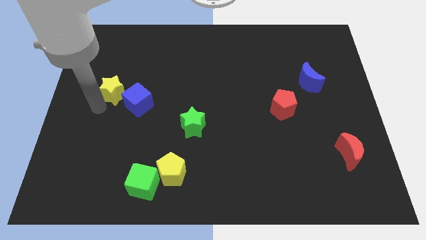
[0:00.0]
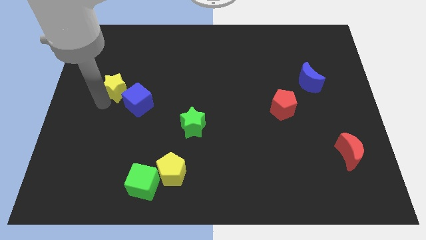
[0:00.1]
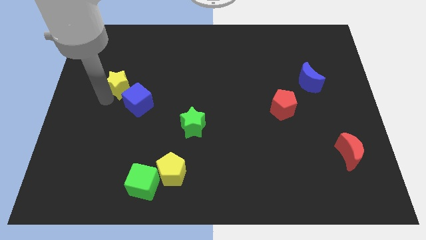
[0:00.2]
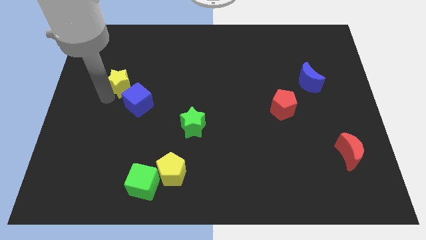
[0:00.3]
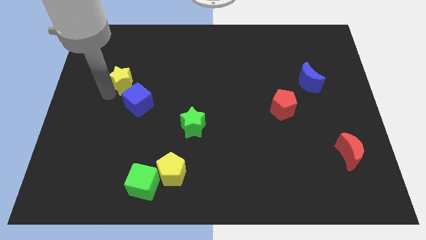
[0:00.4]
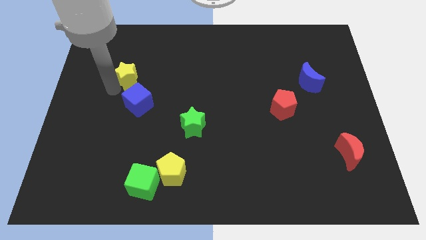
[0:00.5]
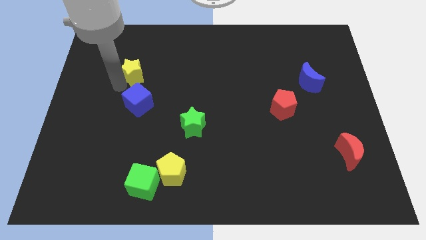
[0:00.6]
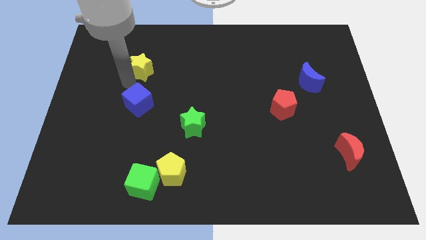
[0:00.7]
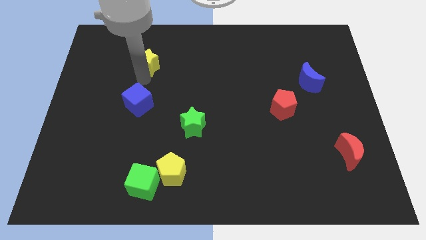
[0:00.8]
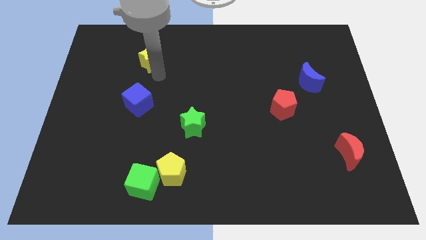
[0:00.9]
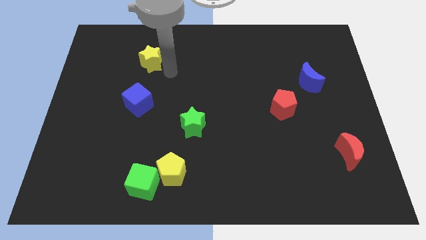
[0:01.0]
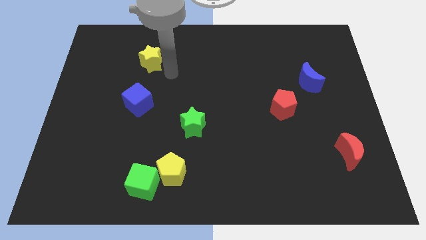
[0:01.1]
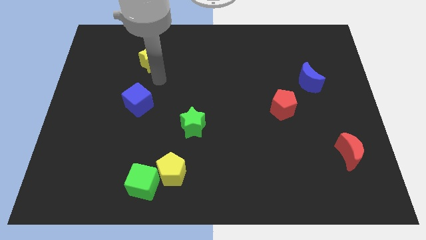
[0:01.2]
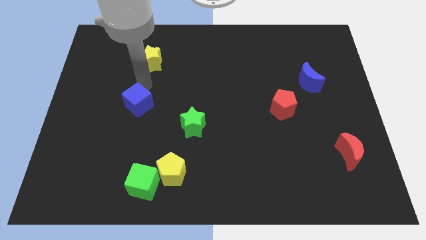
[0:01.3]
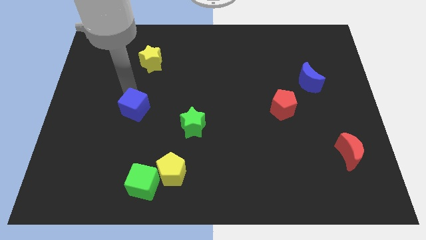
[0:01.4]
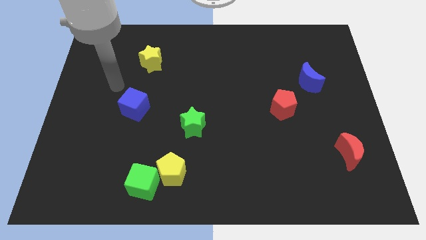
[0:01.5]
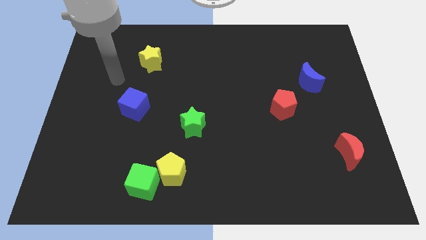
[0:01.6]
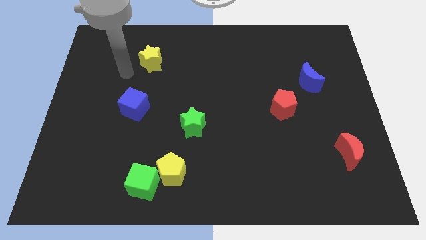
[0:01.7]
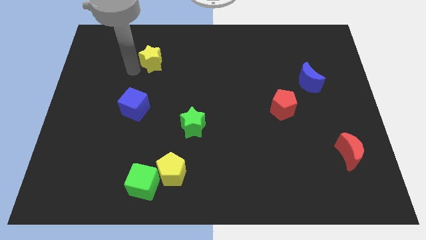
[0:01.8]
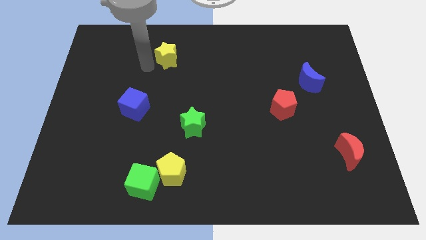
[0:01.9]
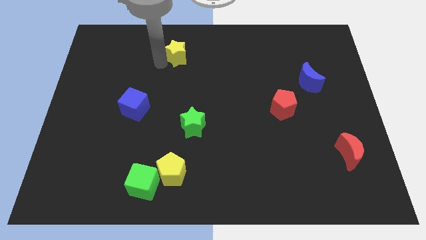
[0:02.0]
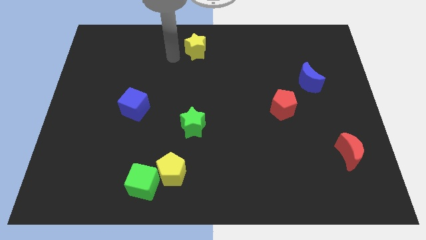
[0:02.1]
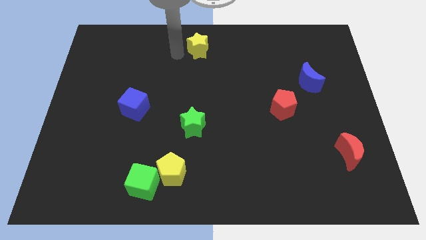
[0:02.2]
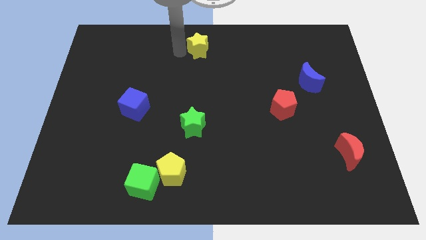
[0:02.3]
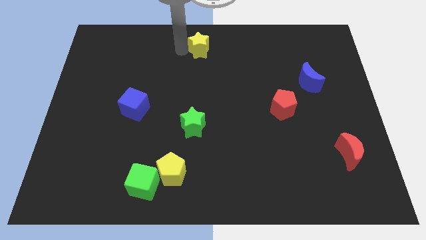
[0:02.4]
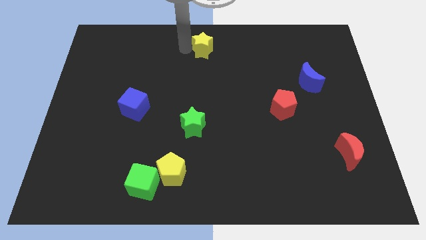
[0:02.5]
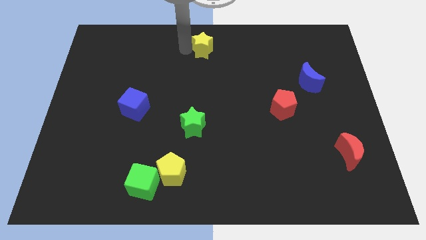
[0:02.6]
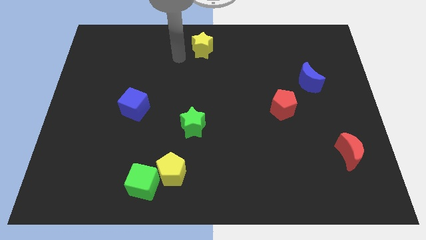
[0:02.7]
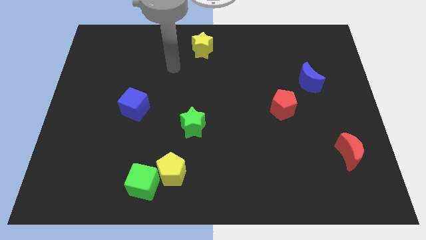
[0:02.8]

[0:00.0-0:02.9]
push the yellow star to the top right of the blue cube

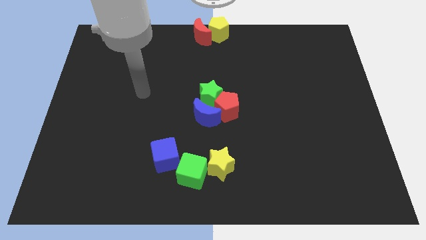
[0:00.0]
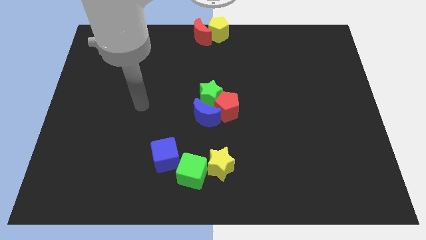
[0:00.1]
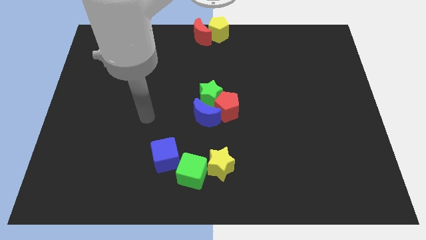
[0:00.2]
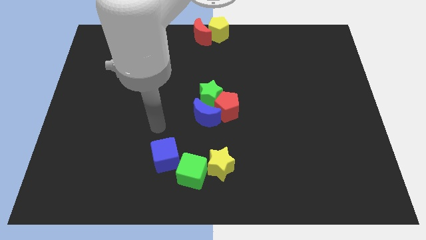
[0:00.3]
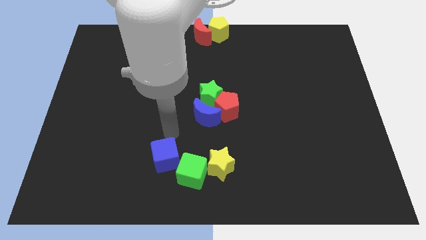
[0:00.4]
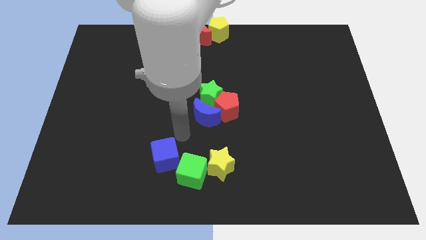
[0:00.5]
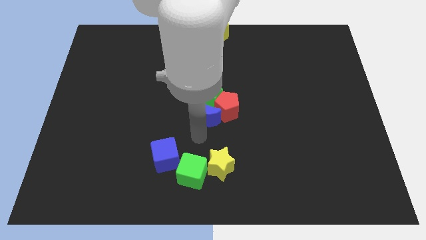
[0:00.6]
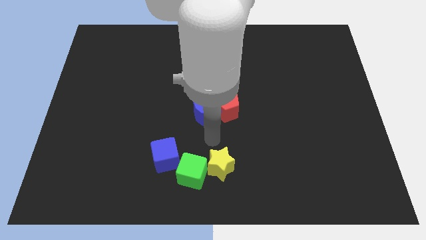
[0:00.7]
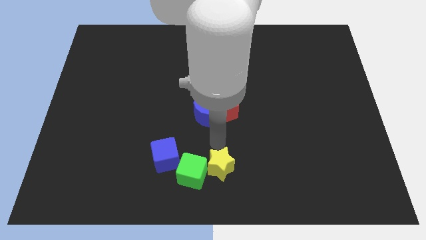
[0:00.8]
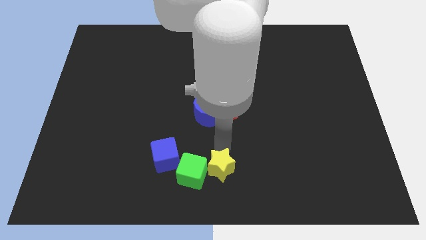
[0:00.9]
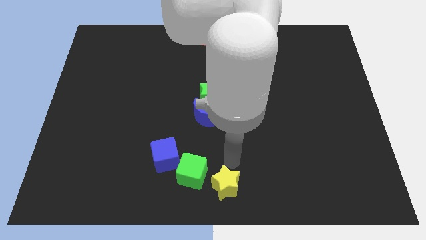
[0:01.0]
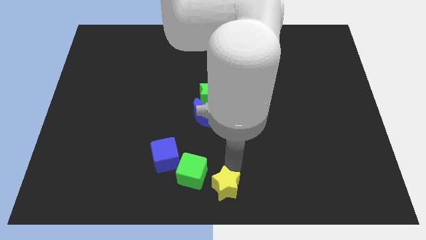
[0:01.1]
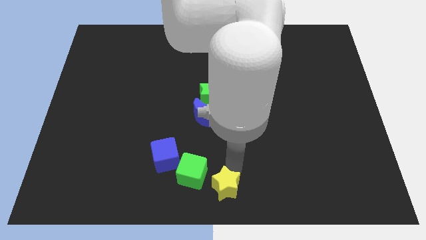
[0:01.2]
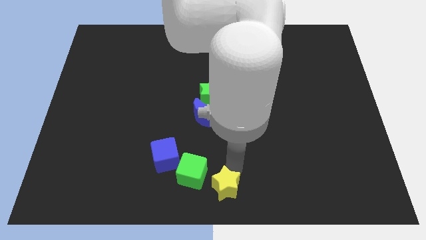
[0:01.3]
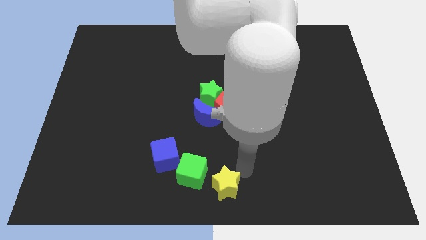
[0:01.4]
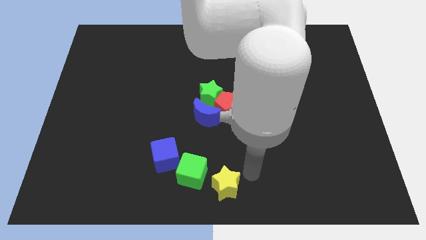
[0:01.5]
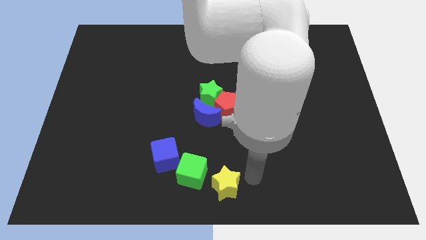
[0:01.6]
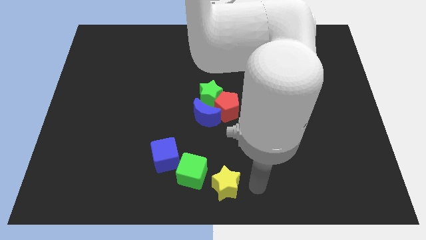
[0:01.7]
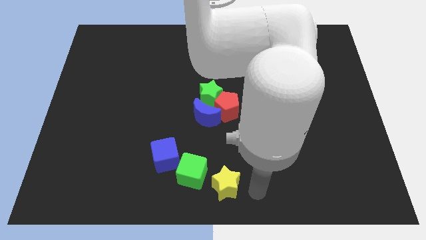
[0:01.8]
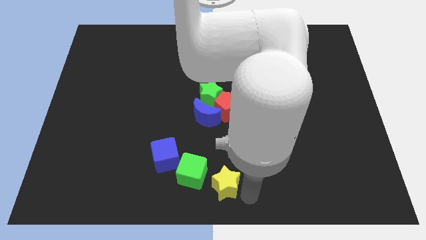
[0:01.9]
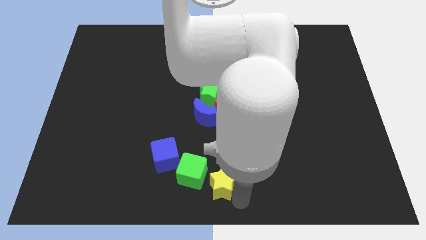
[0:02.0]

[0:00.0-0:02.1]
point your arm right to yellow star

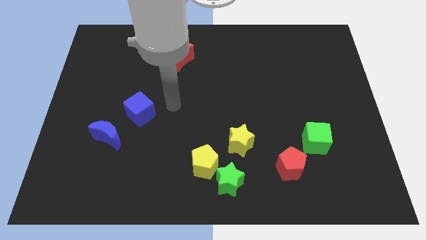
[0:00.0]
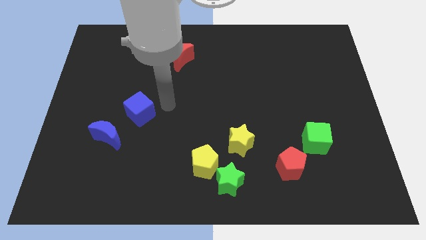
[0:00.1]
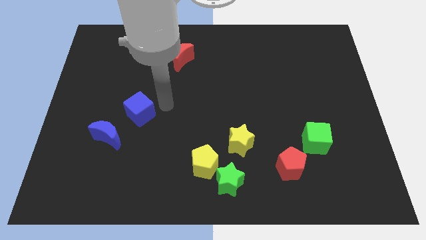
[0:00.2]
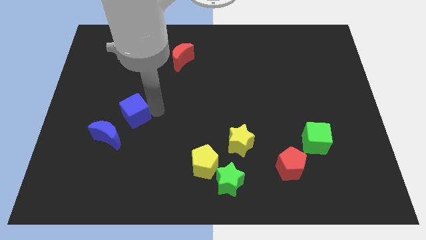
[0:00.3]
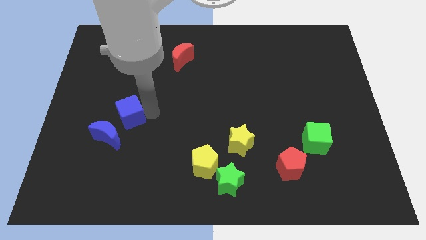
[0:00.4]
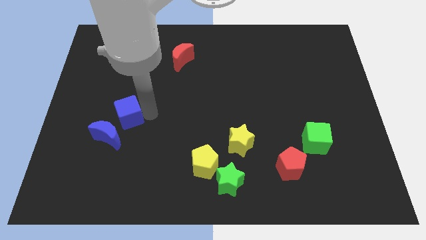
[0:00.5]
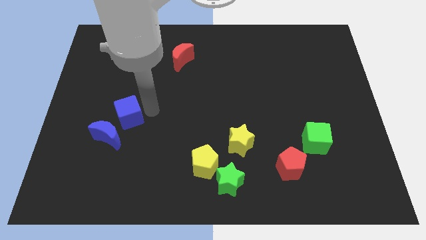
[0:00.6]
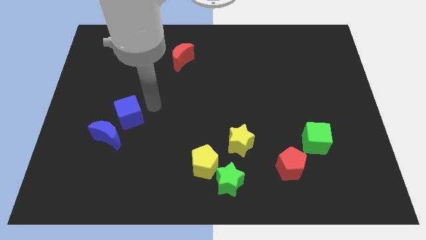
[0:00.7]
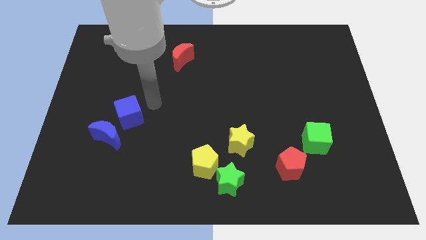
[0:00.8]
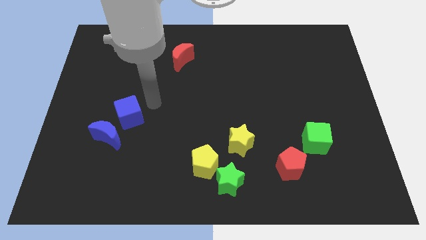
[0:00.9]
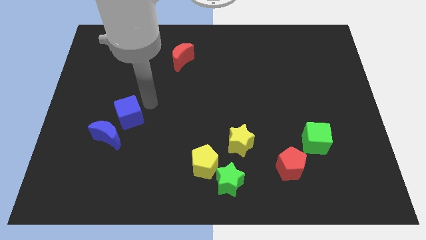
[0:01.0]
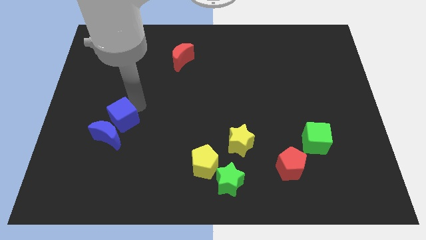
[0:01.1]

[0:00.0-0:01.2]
slightly push the blue cube close to the top side of the blue moon

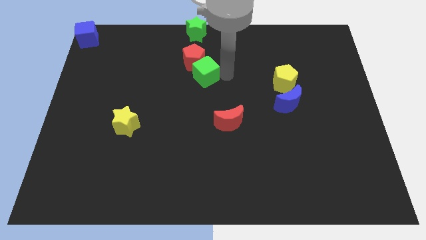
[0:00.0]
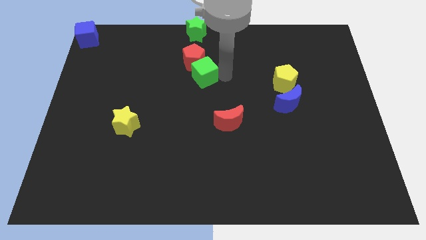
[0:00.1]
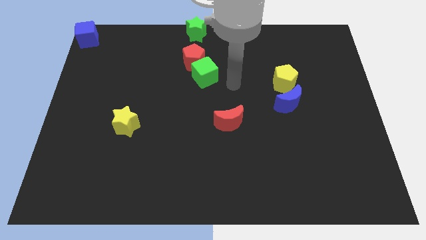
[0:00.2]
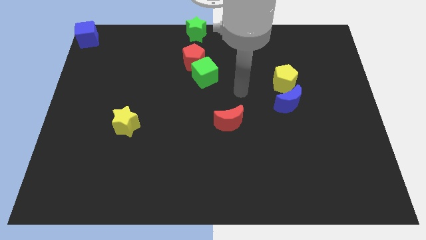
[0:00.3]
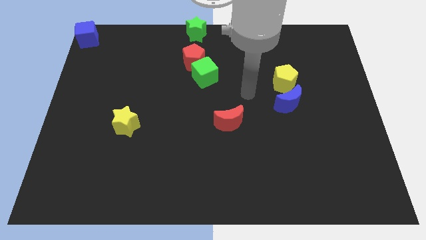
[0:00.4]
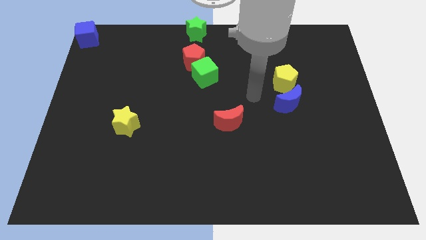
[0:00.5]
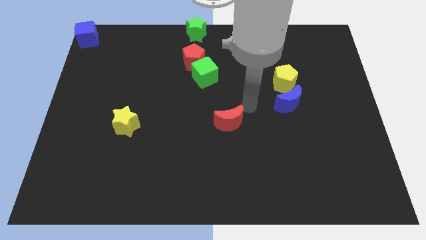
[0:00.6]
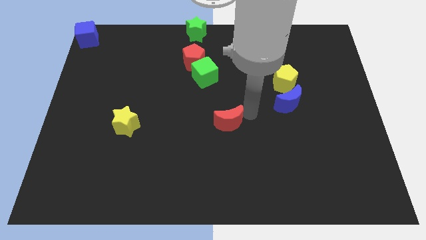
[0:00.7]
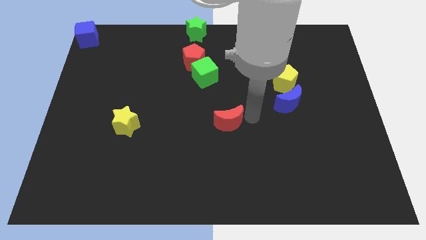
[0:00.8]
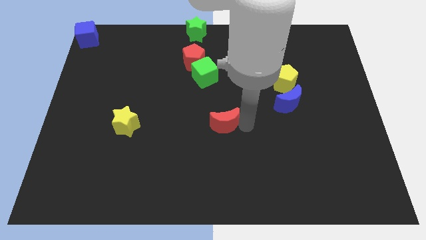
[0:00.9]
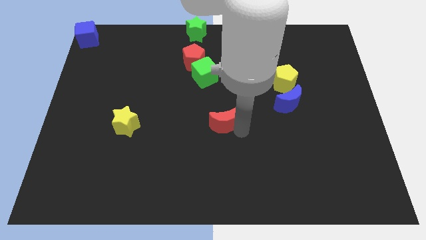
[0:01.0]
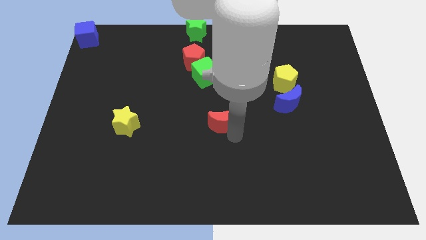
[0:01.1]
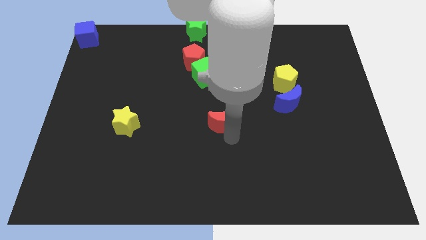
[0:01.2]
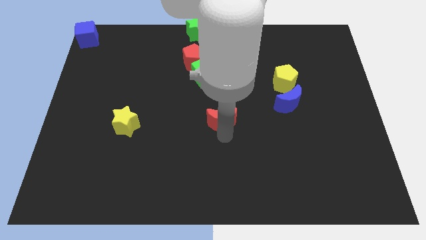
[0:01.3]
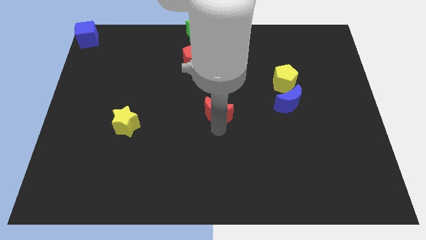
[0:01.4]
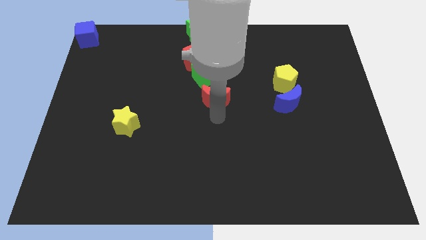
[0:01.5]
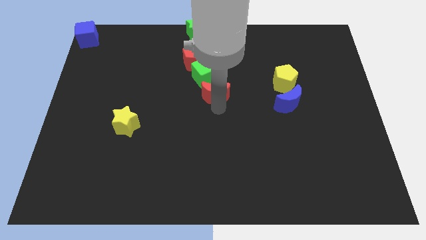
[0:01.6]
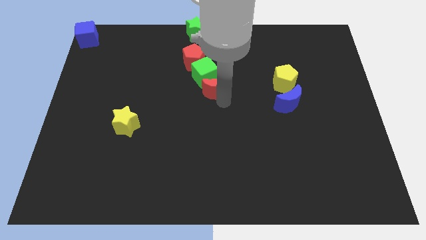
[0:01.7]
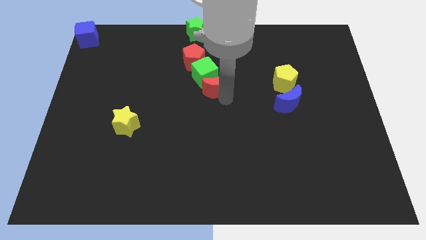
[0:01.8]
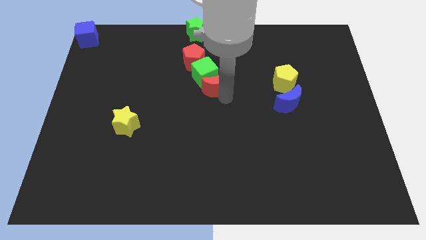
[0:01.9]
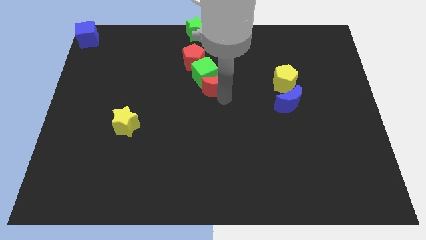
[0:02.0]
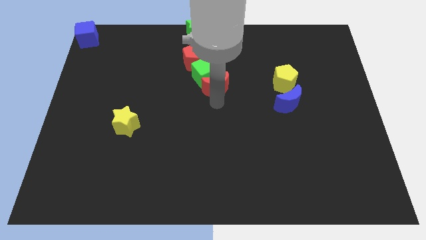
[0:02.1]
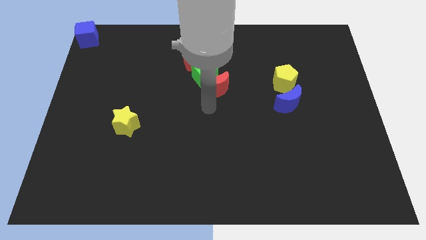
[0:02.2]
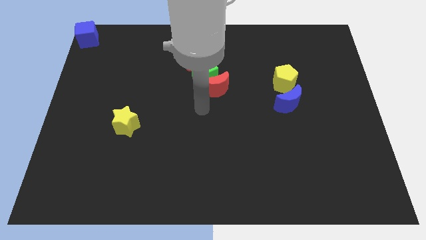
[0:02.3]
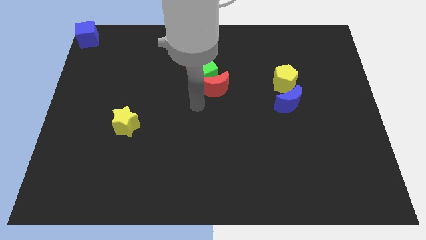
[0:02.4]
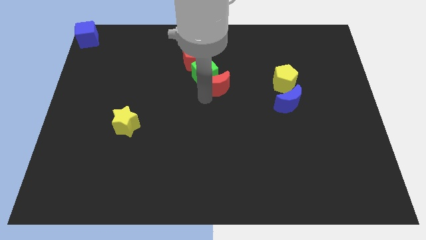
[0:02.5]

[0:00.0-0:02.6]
move the red moon down to the green cube

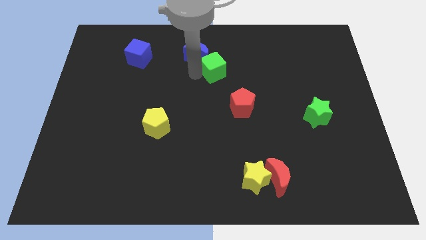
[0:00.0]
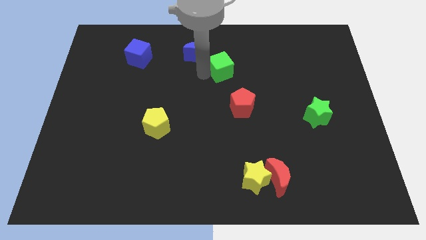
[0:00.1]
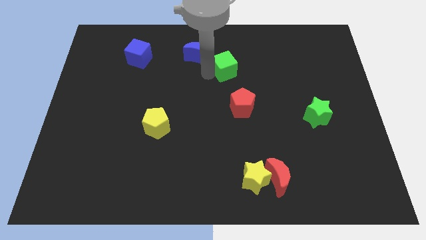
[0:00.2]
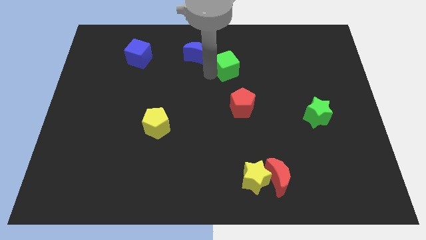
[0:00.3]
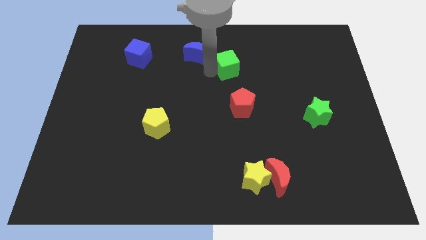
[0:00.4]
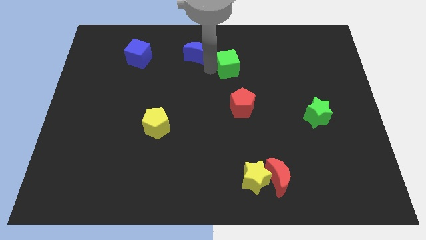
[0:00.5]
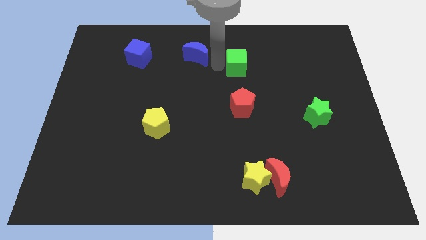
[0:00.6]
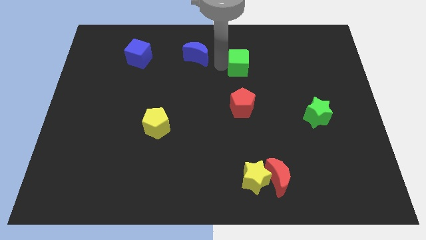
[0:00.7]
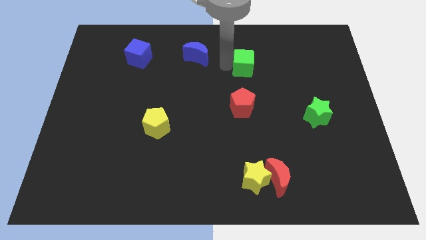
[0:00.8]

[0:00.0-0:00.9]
move green cube above red pentagon
